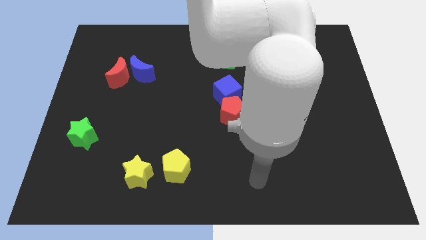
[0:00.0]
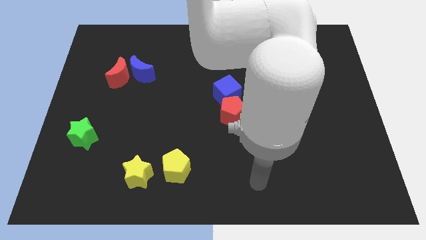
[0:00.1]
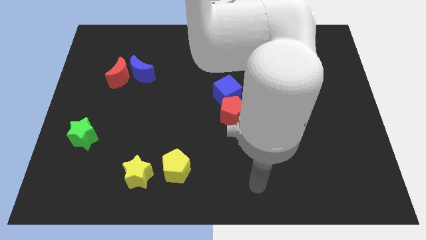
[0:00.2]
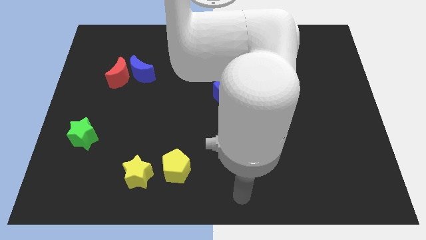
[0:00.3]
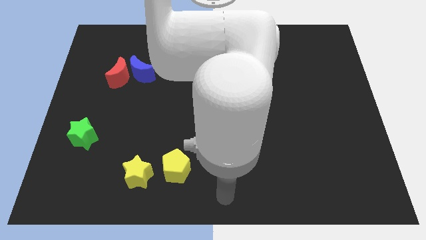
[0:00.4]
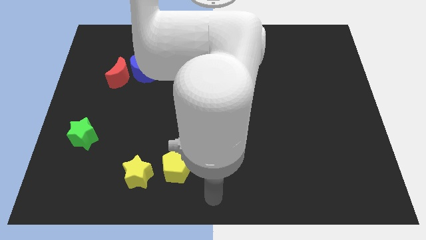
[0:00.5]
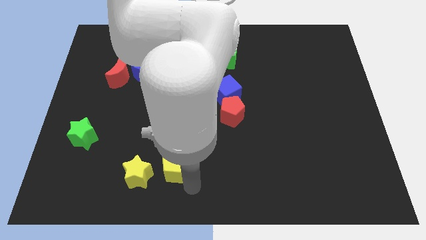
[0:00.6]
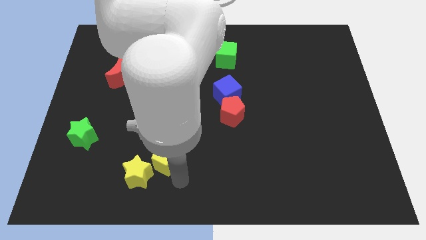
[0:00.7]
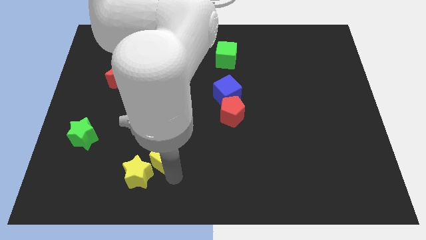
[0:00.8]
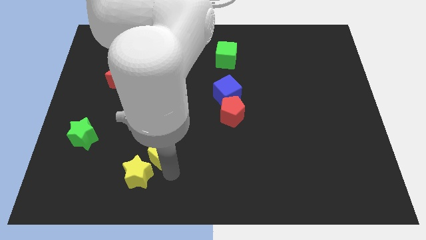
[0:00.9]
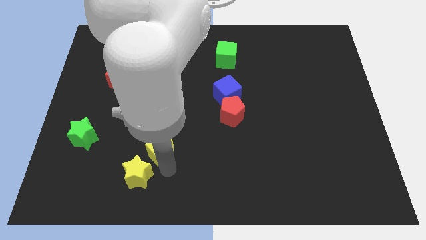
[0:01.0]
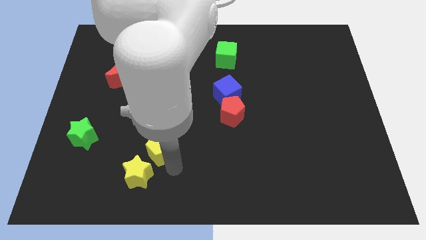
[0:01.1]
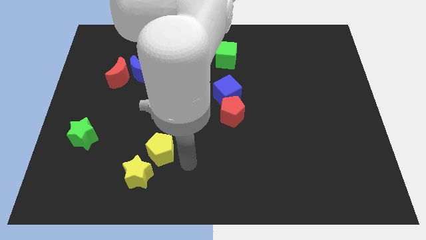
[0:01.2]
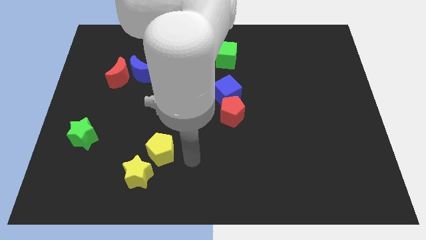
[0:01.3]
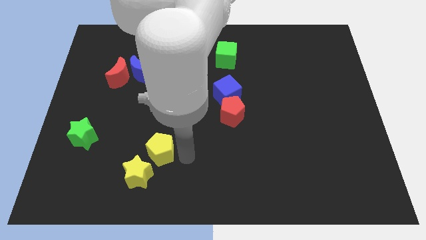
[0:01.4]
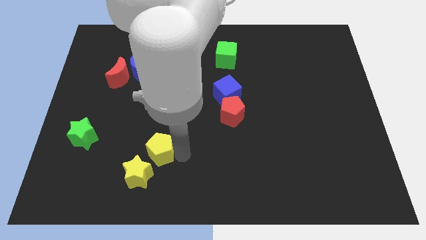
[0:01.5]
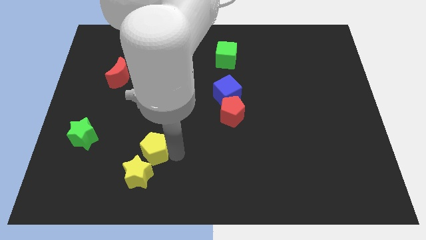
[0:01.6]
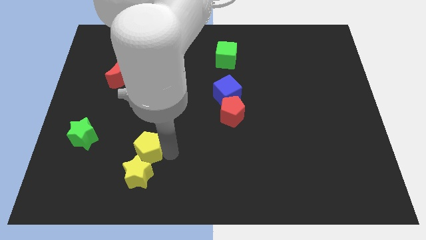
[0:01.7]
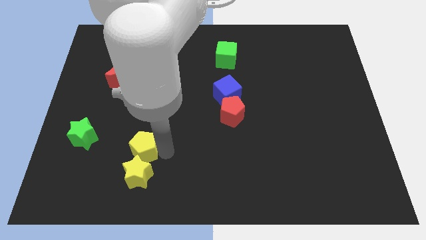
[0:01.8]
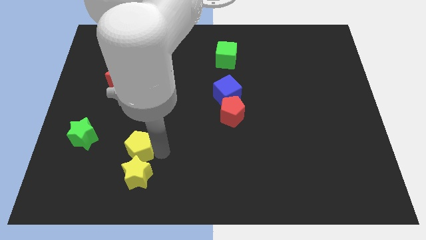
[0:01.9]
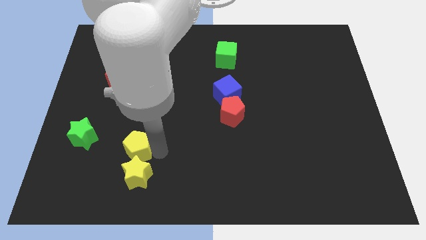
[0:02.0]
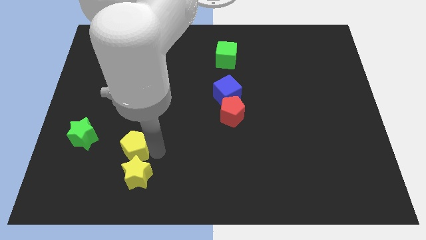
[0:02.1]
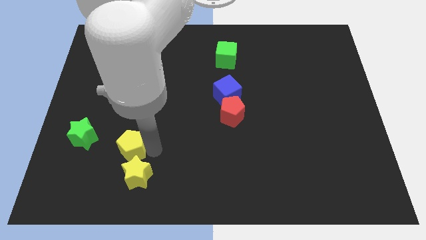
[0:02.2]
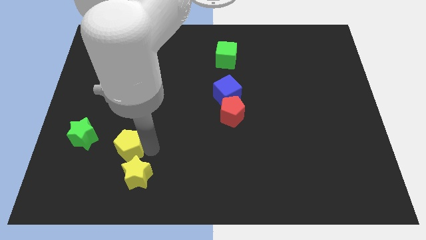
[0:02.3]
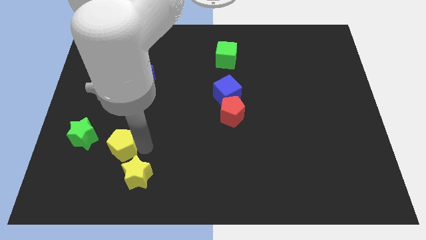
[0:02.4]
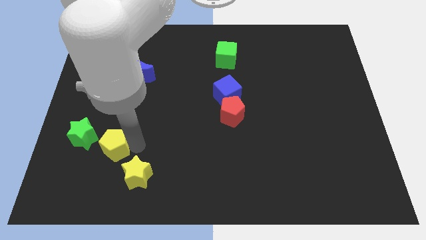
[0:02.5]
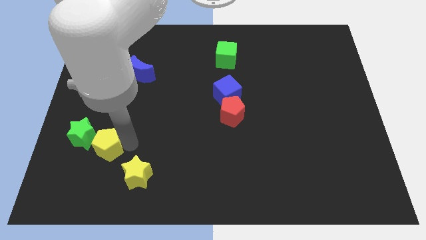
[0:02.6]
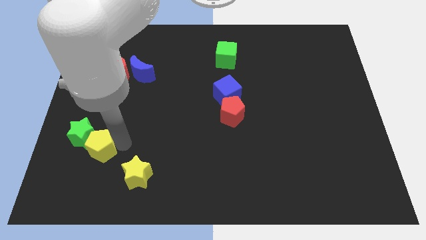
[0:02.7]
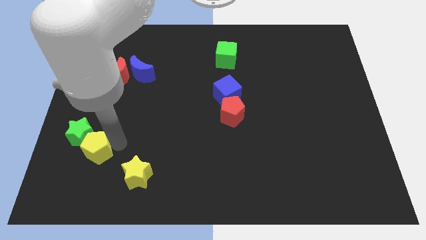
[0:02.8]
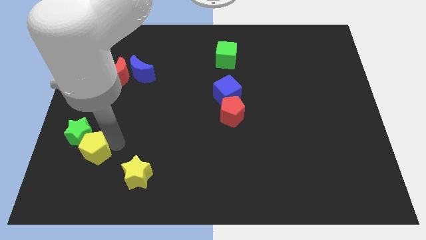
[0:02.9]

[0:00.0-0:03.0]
push the yellow pentagon towards the green star

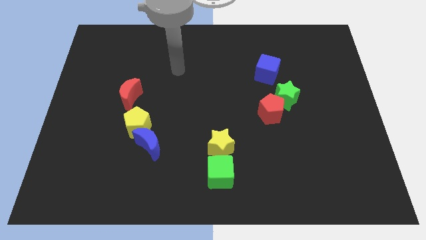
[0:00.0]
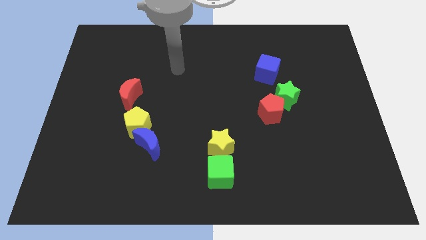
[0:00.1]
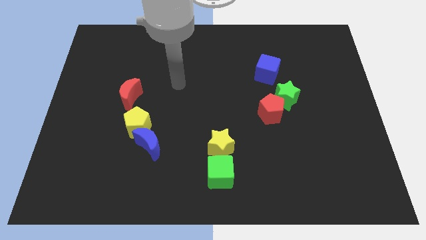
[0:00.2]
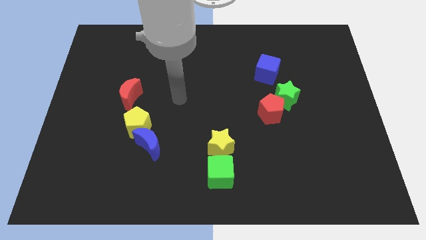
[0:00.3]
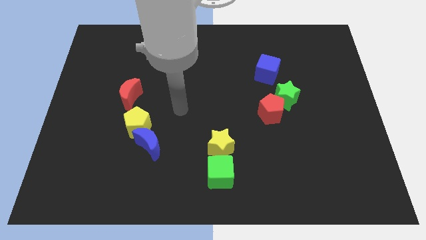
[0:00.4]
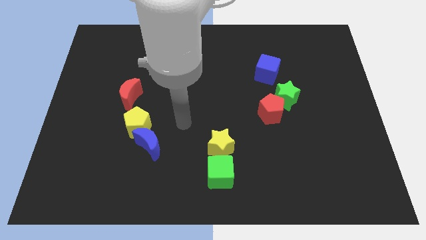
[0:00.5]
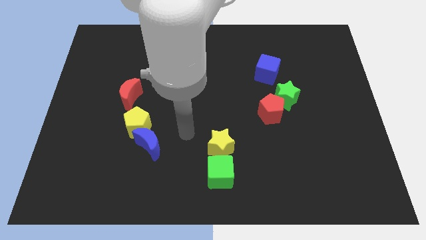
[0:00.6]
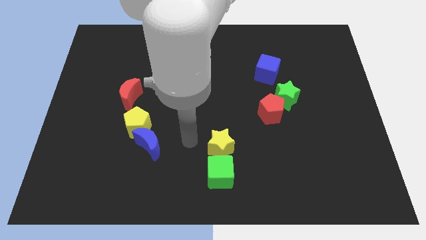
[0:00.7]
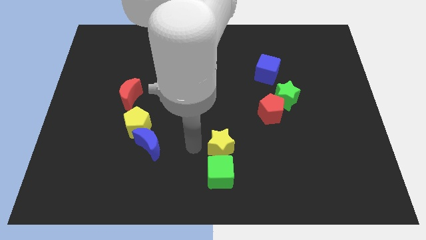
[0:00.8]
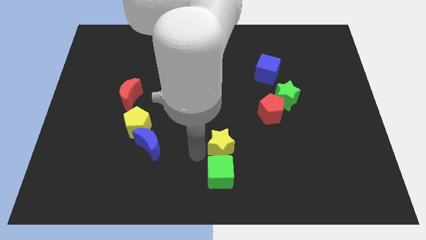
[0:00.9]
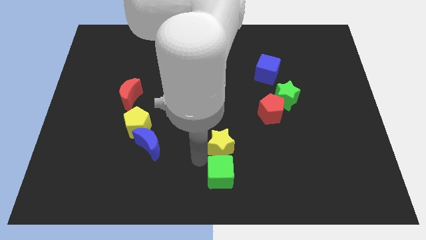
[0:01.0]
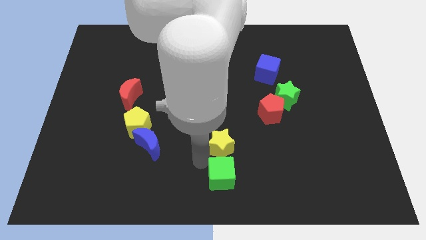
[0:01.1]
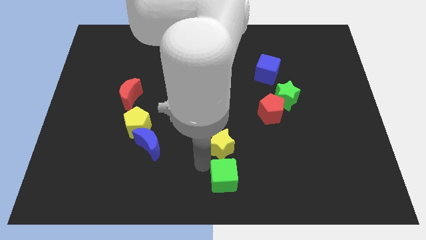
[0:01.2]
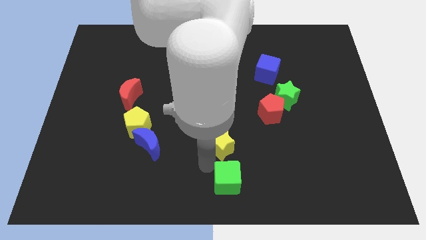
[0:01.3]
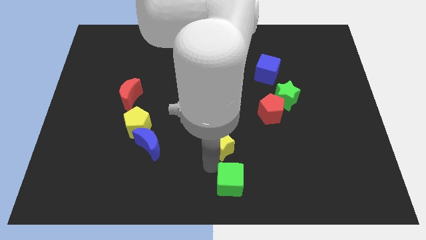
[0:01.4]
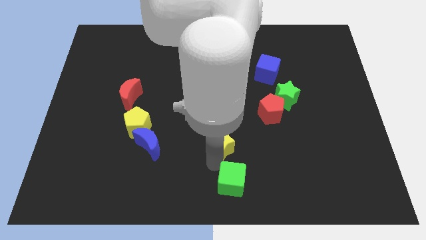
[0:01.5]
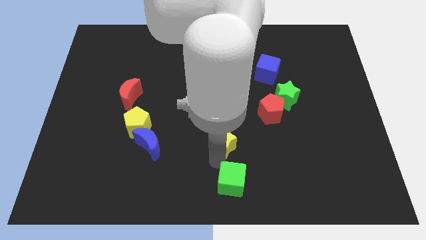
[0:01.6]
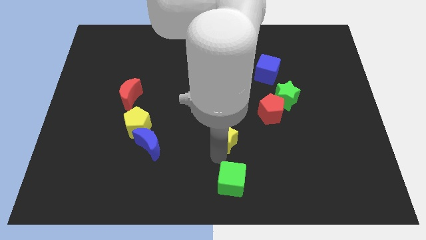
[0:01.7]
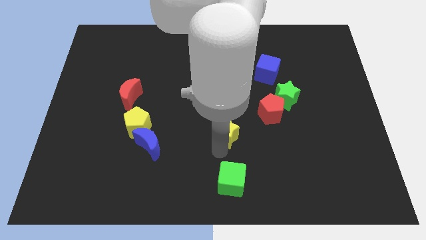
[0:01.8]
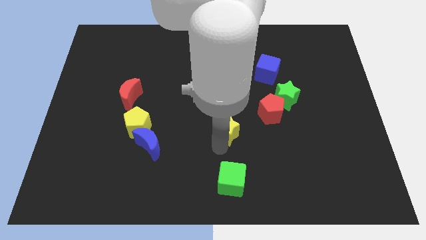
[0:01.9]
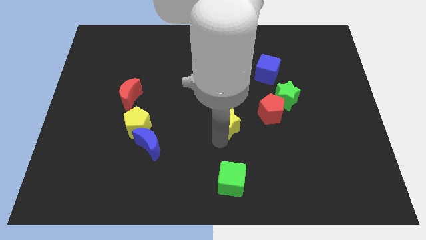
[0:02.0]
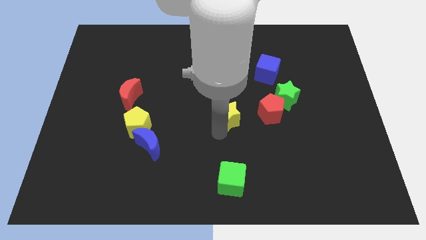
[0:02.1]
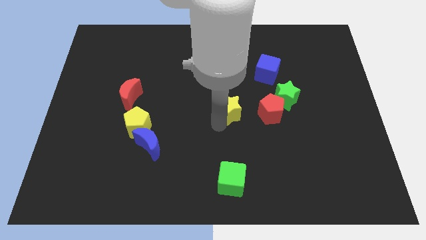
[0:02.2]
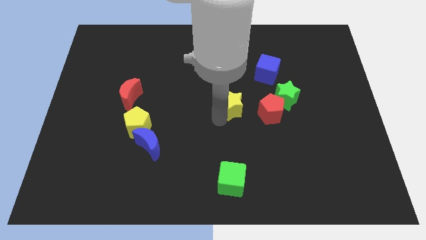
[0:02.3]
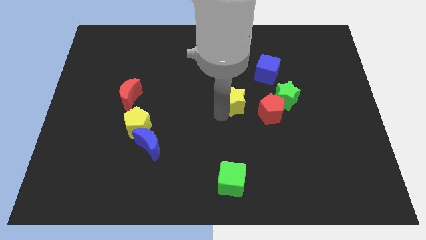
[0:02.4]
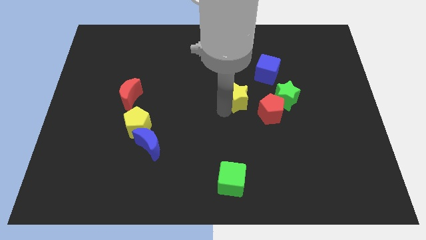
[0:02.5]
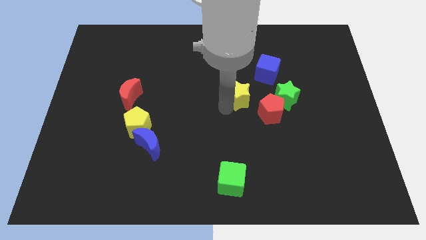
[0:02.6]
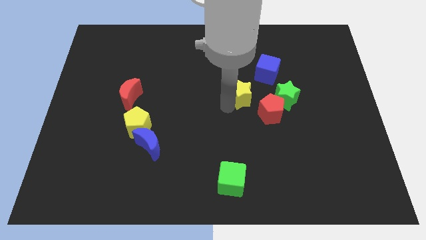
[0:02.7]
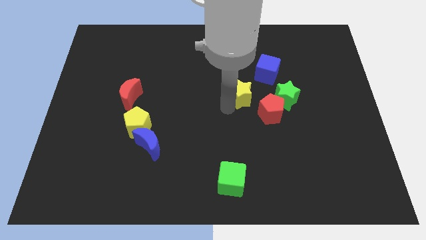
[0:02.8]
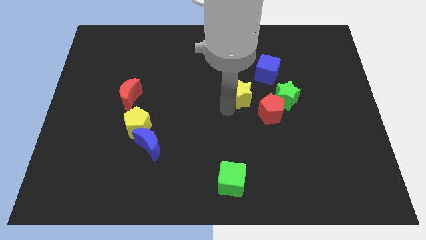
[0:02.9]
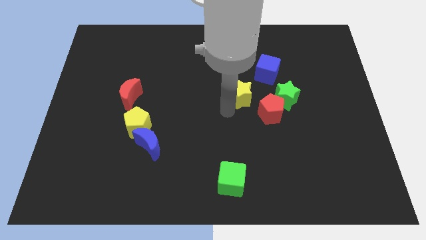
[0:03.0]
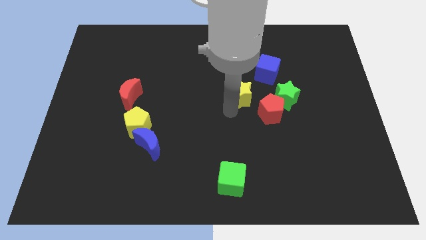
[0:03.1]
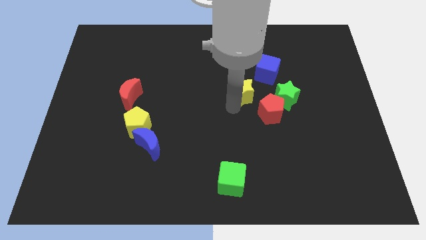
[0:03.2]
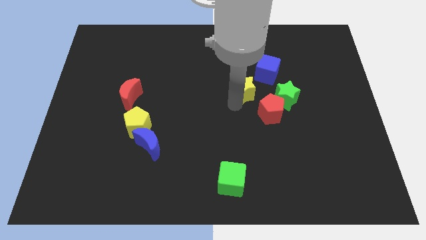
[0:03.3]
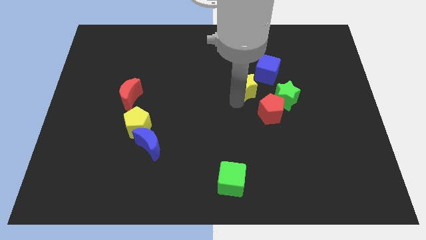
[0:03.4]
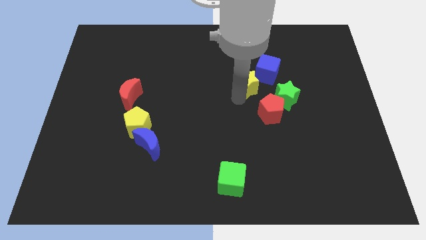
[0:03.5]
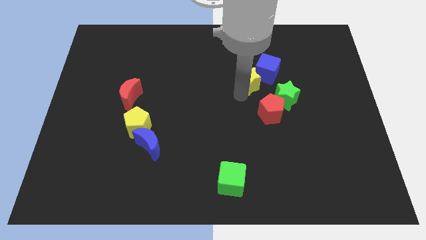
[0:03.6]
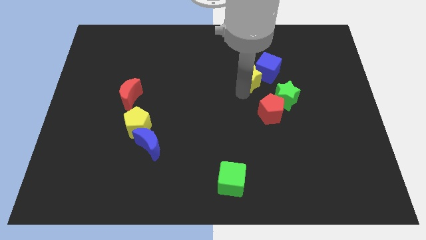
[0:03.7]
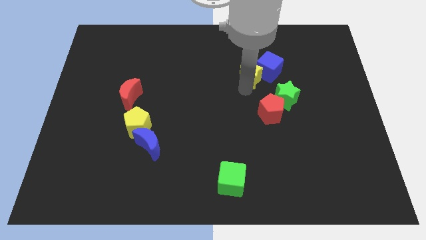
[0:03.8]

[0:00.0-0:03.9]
move the yellow star towards the blue cube

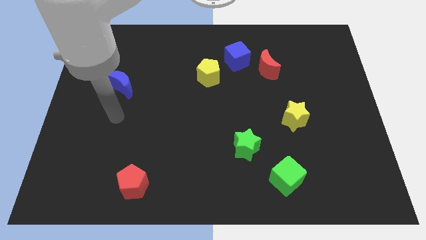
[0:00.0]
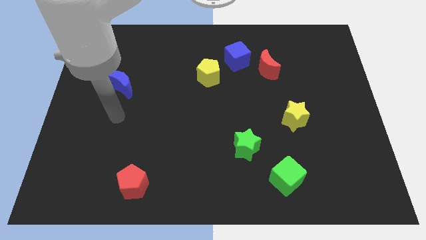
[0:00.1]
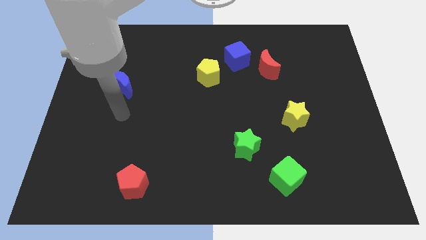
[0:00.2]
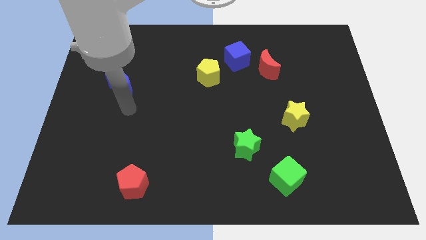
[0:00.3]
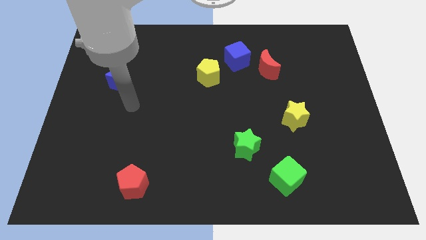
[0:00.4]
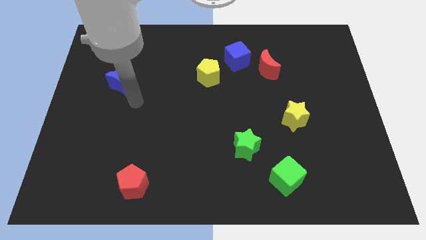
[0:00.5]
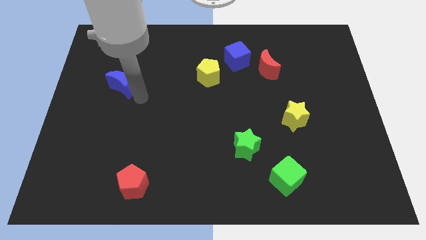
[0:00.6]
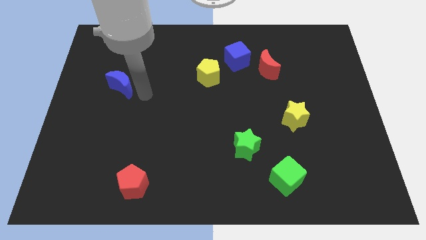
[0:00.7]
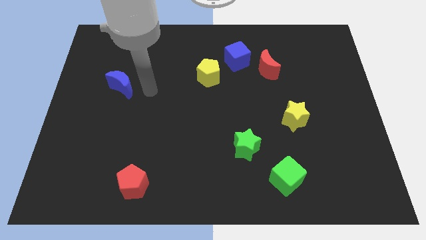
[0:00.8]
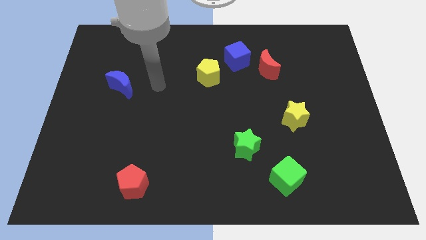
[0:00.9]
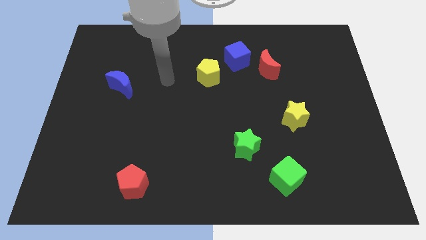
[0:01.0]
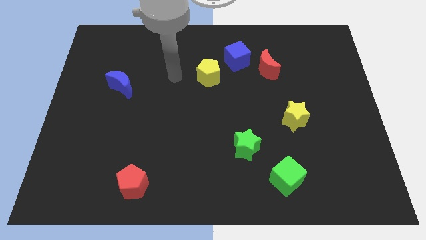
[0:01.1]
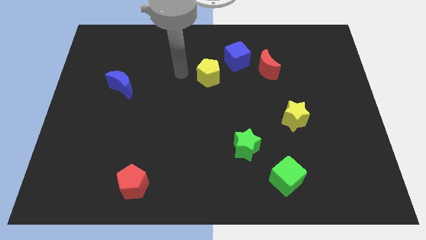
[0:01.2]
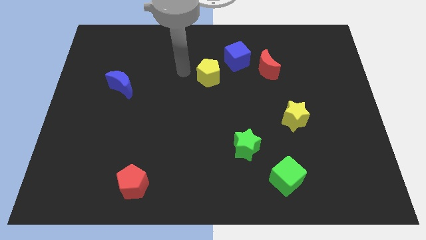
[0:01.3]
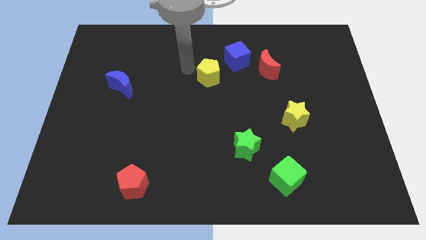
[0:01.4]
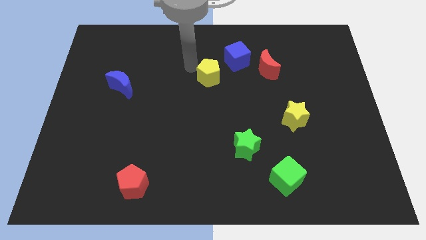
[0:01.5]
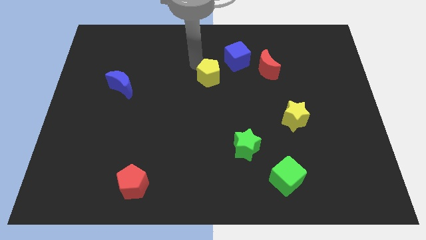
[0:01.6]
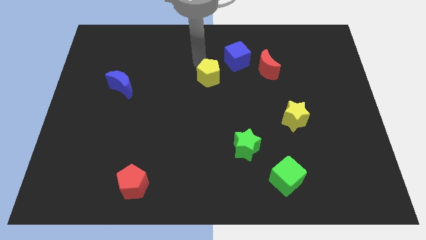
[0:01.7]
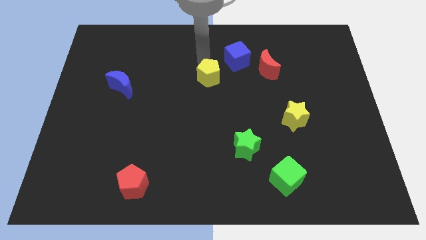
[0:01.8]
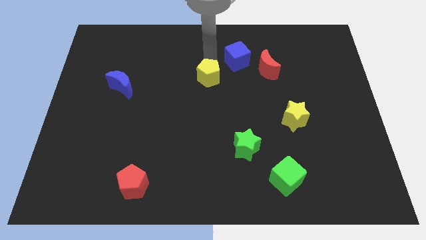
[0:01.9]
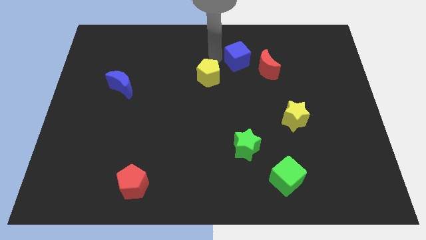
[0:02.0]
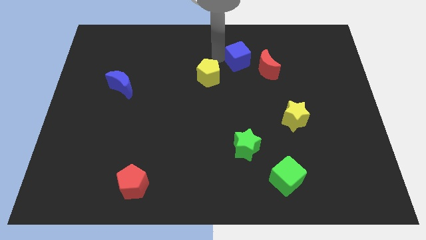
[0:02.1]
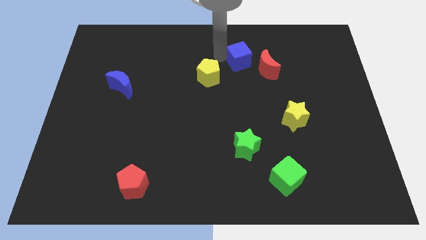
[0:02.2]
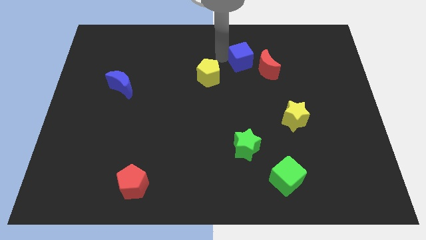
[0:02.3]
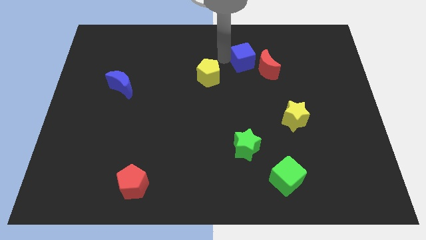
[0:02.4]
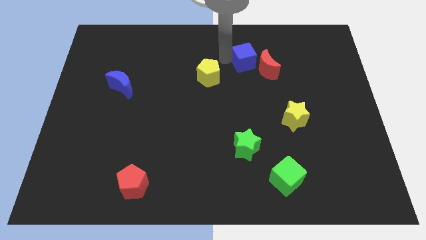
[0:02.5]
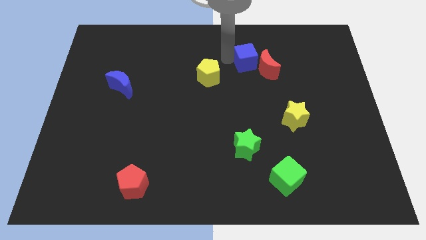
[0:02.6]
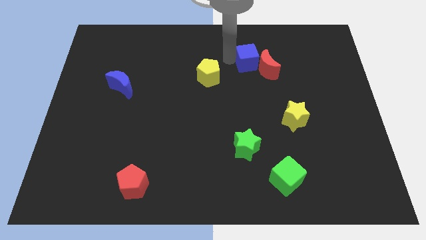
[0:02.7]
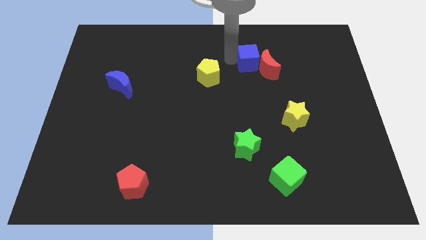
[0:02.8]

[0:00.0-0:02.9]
move the blue cube towards the red moon
